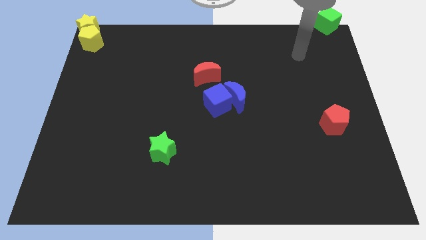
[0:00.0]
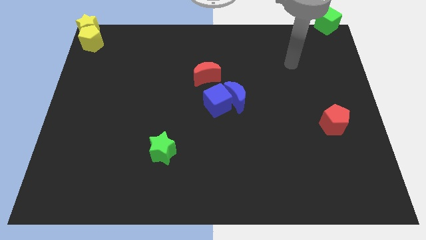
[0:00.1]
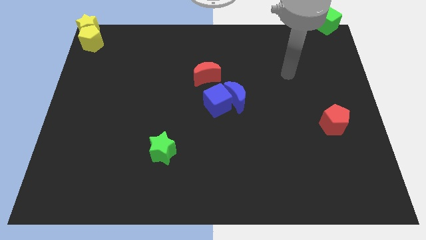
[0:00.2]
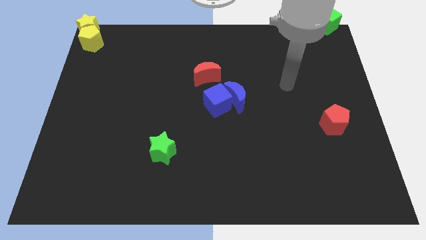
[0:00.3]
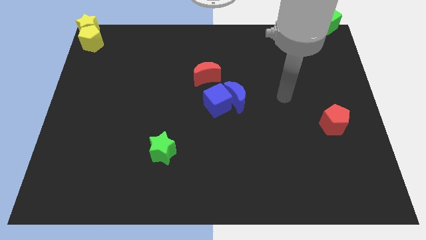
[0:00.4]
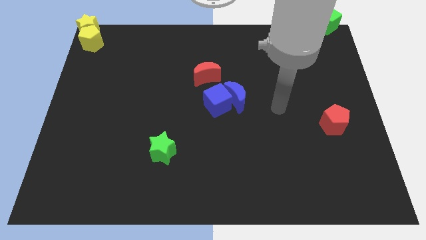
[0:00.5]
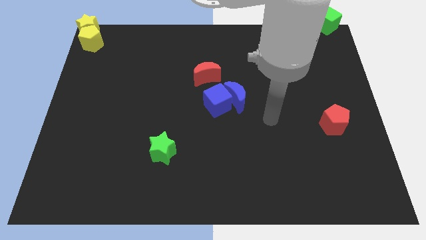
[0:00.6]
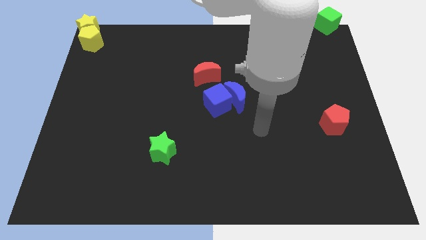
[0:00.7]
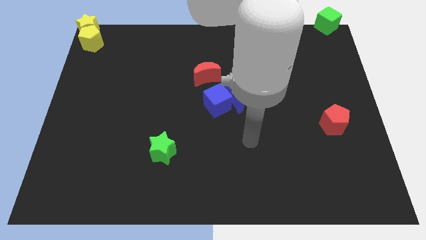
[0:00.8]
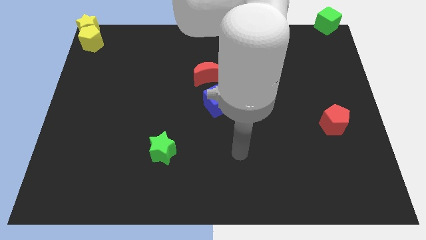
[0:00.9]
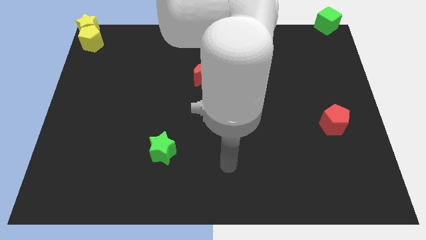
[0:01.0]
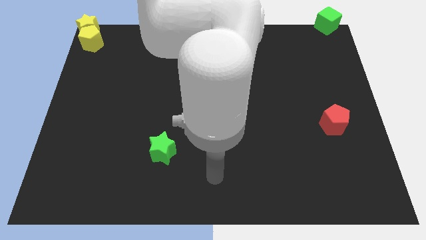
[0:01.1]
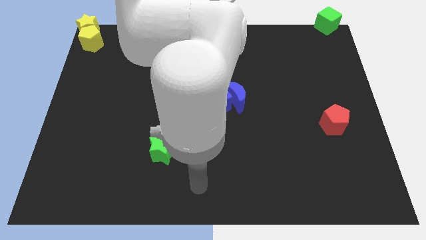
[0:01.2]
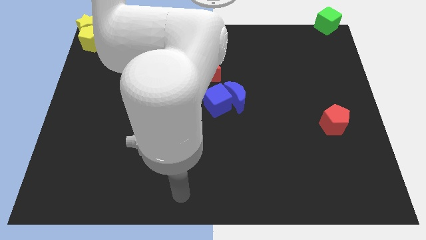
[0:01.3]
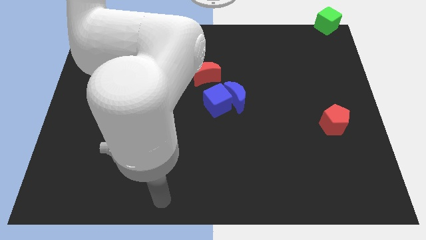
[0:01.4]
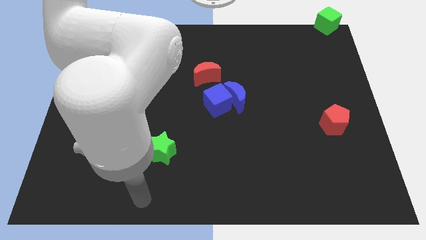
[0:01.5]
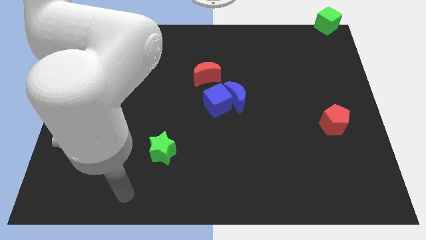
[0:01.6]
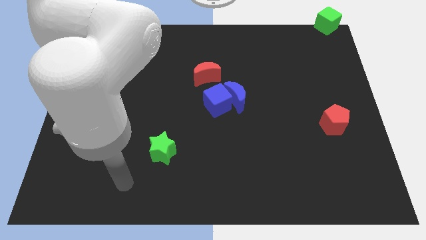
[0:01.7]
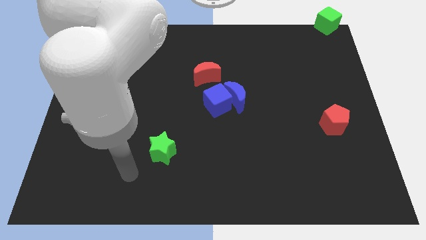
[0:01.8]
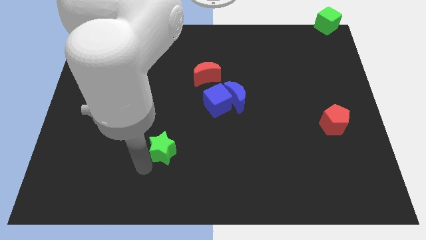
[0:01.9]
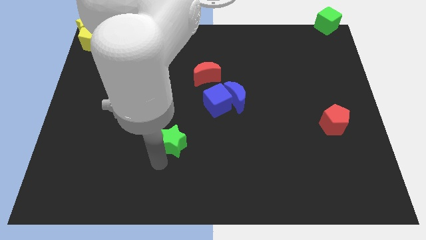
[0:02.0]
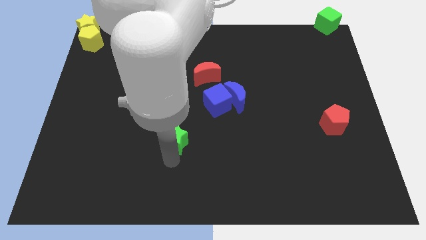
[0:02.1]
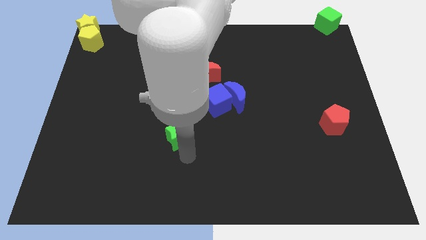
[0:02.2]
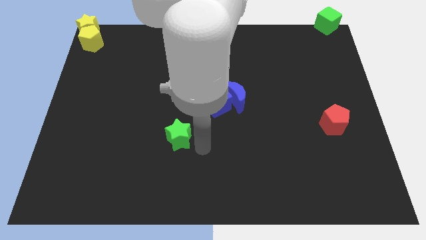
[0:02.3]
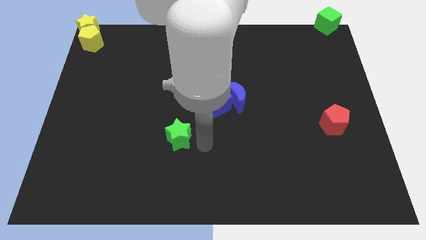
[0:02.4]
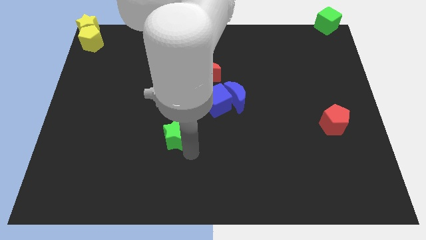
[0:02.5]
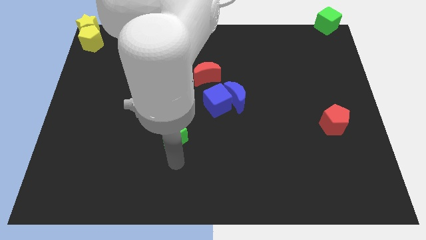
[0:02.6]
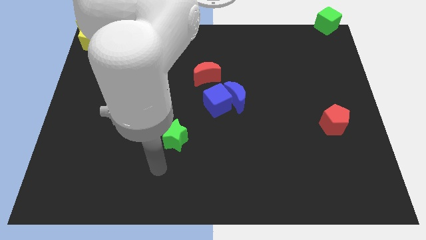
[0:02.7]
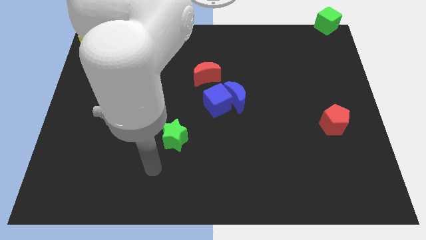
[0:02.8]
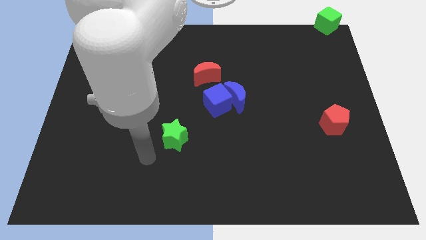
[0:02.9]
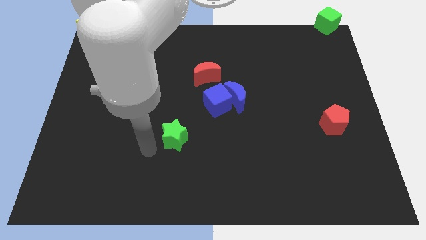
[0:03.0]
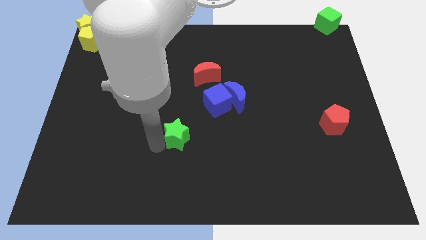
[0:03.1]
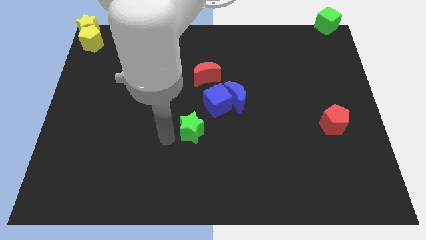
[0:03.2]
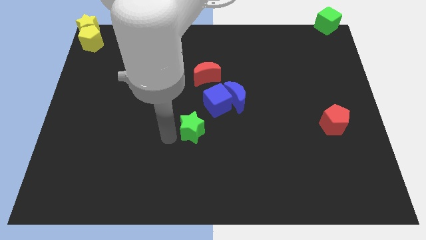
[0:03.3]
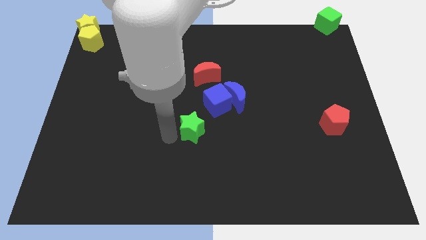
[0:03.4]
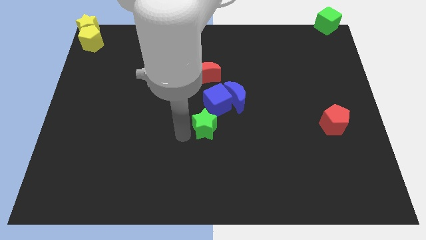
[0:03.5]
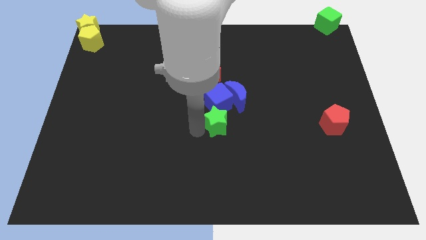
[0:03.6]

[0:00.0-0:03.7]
place green star to the bottom of the blue cube

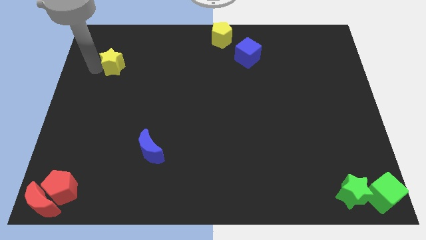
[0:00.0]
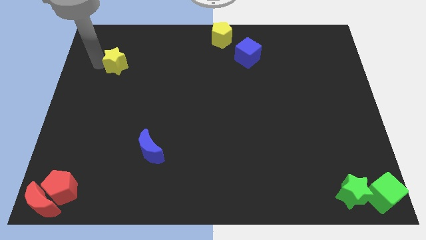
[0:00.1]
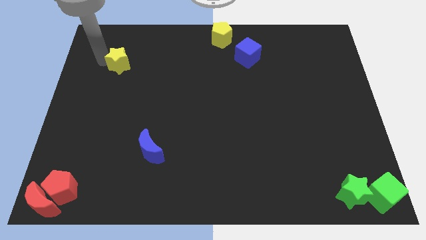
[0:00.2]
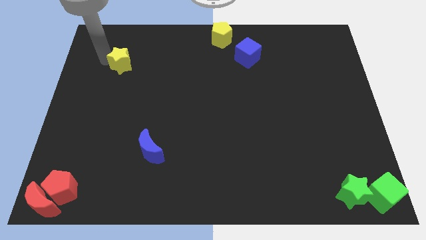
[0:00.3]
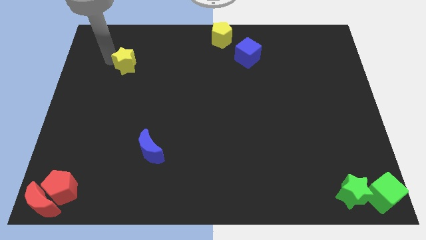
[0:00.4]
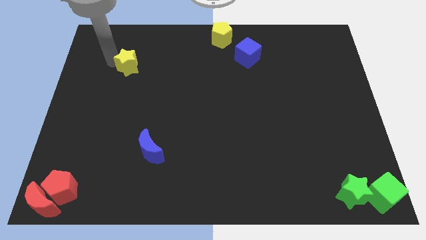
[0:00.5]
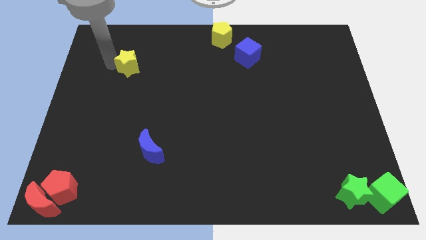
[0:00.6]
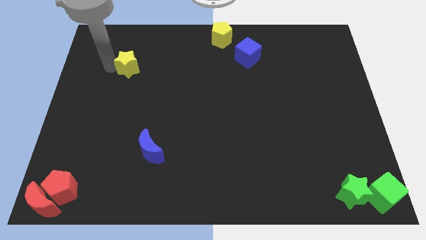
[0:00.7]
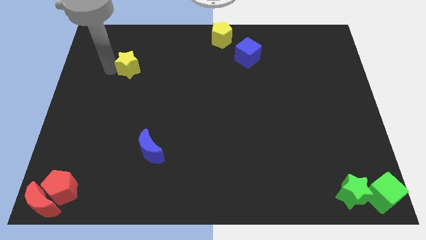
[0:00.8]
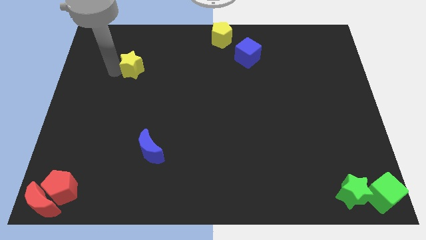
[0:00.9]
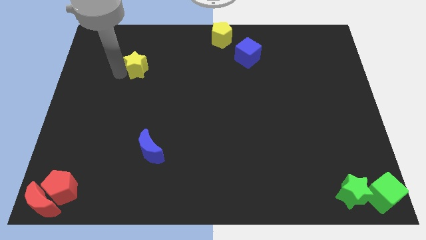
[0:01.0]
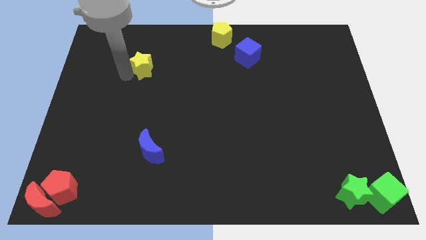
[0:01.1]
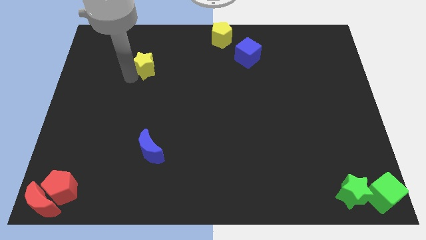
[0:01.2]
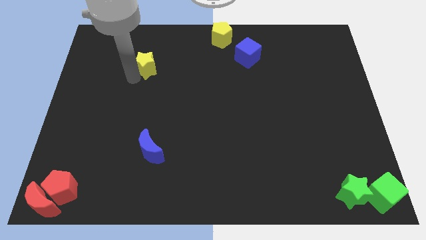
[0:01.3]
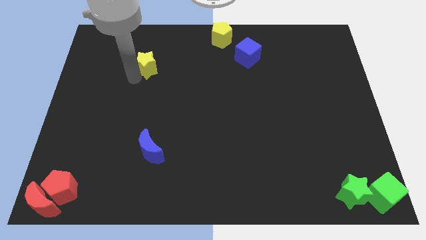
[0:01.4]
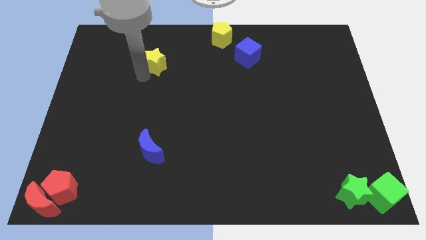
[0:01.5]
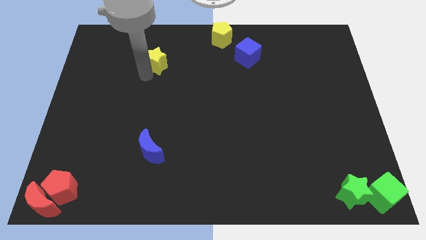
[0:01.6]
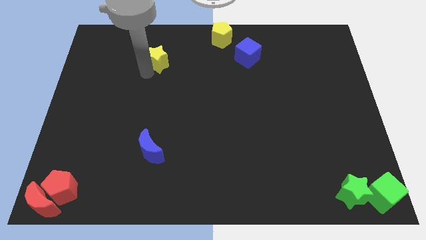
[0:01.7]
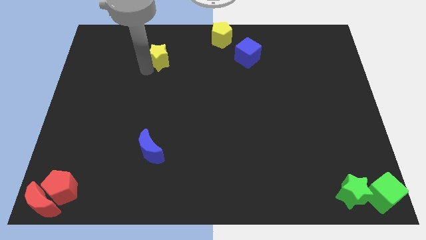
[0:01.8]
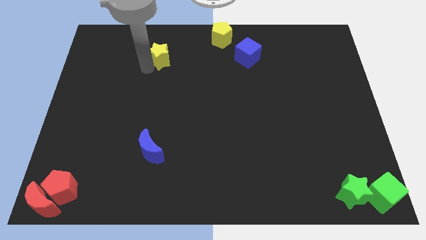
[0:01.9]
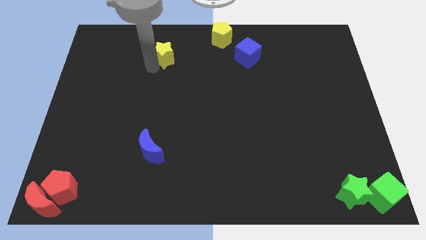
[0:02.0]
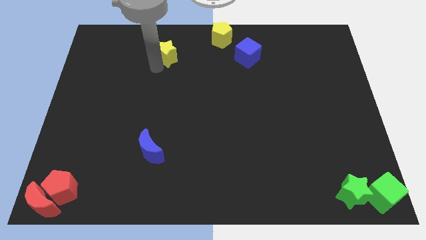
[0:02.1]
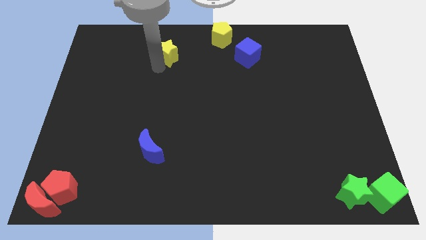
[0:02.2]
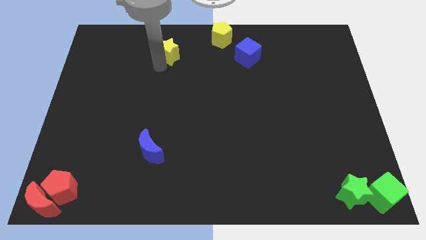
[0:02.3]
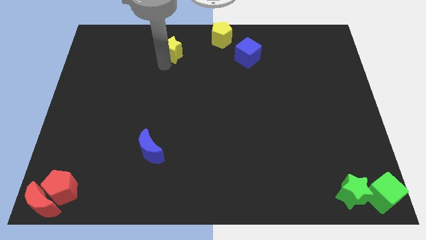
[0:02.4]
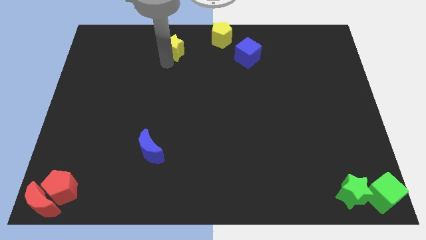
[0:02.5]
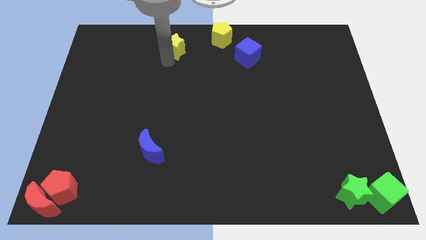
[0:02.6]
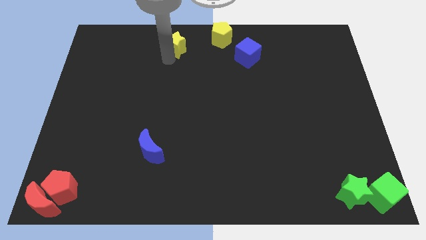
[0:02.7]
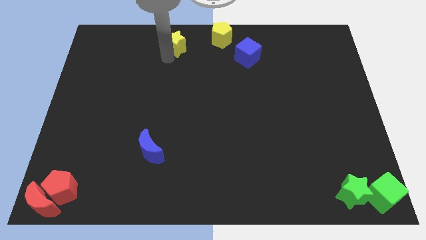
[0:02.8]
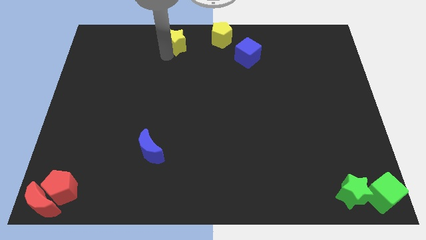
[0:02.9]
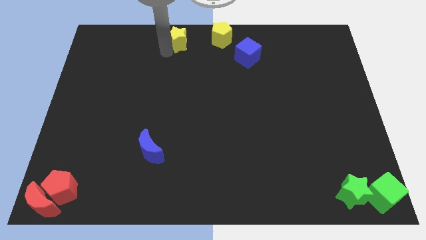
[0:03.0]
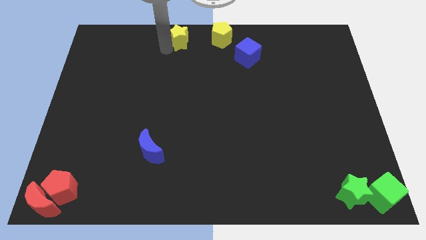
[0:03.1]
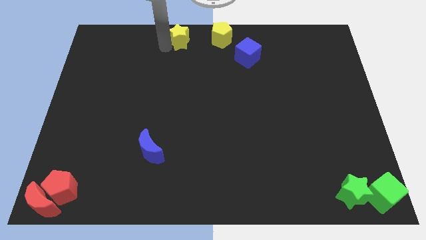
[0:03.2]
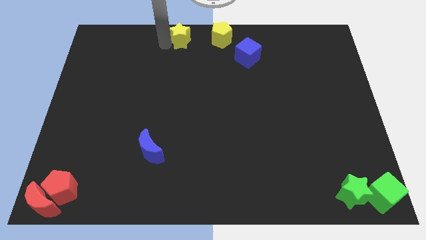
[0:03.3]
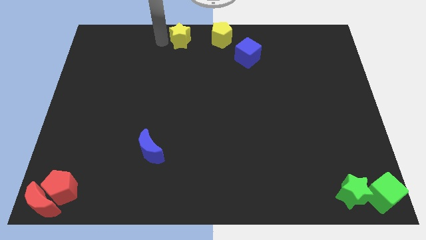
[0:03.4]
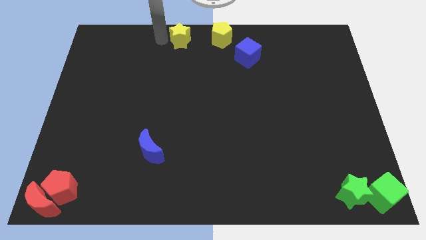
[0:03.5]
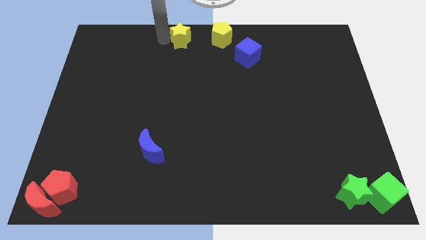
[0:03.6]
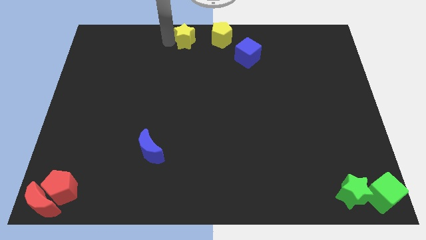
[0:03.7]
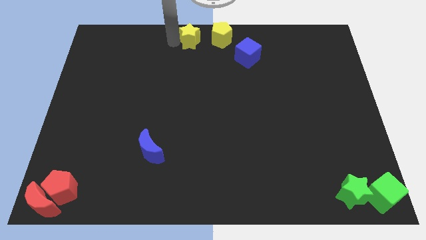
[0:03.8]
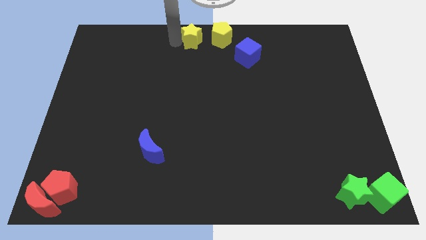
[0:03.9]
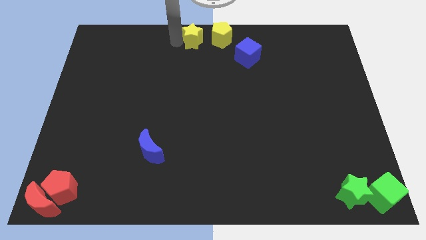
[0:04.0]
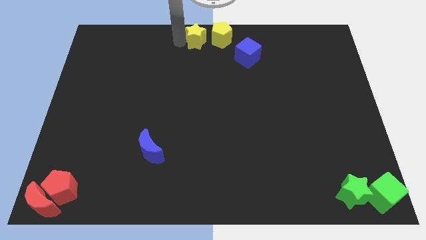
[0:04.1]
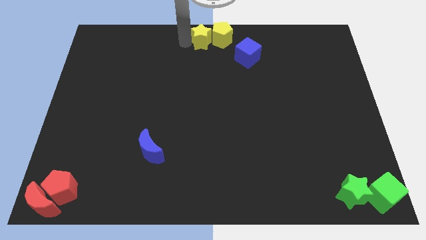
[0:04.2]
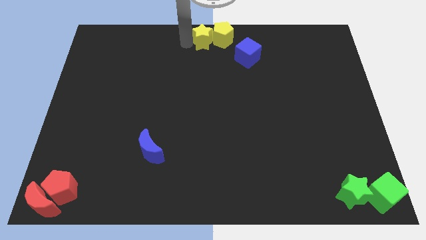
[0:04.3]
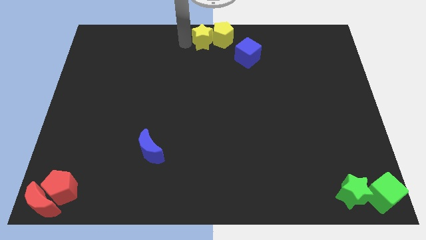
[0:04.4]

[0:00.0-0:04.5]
push the yellow star to the left side of the yellow pentagon

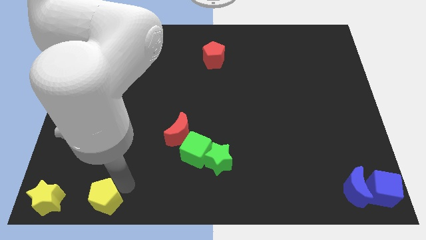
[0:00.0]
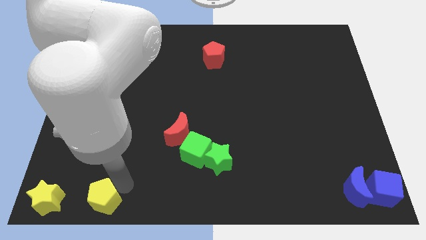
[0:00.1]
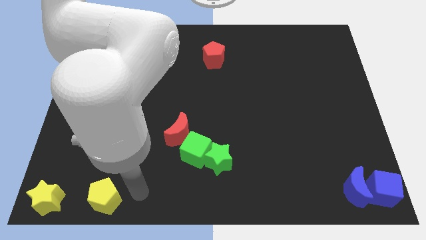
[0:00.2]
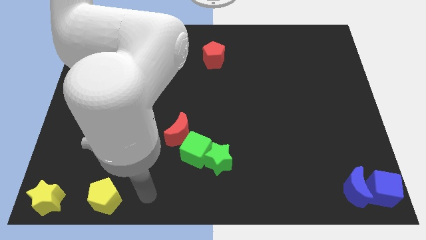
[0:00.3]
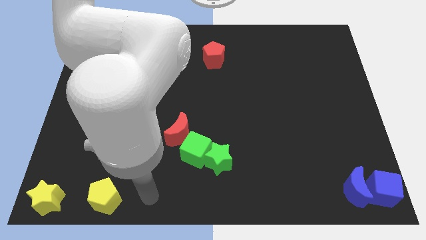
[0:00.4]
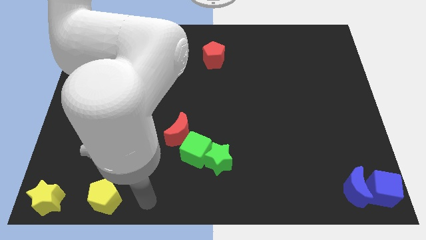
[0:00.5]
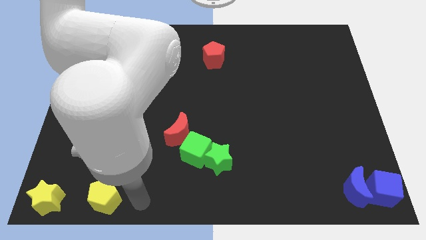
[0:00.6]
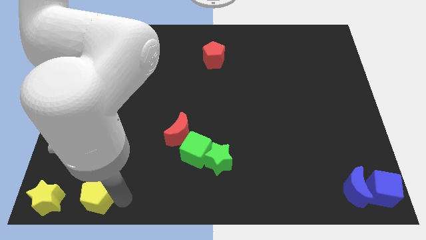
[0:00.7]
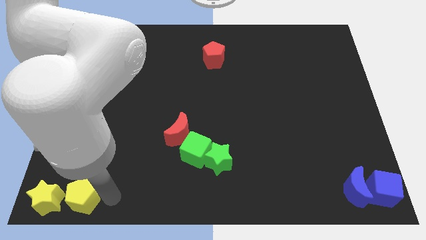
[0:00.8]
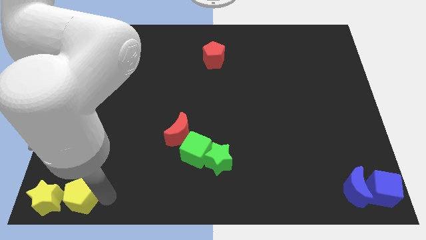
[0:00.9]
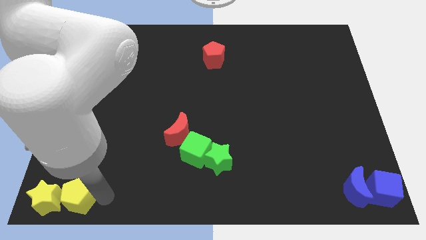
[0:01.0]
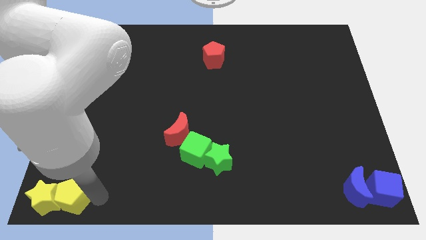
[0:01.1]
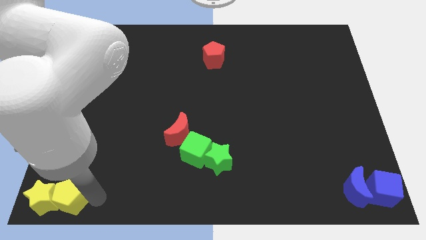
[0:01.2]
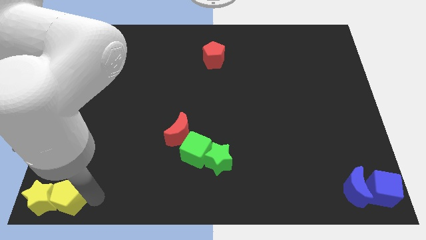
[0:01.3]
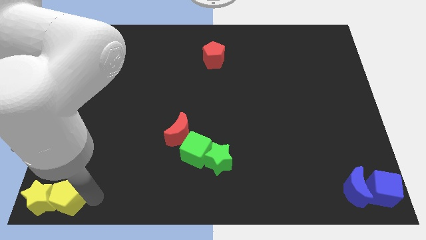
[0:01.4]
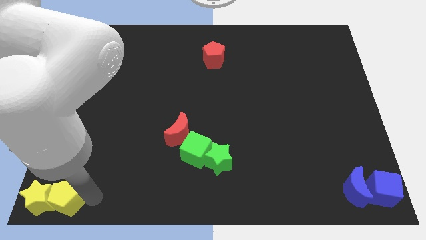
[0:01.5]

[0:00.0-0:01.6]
push the yellow pentagon into the yellow star
